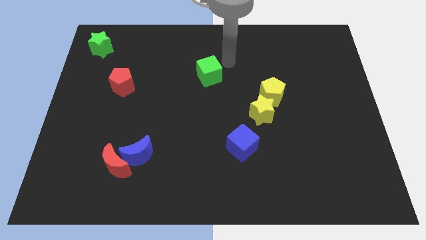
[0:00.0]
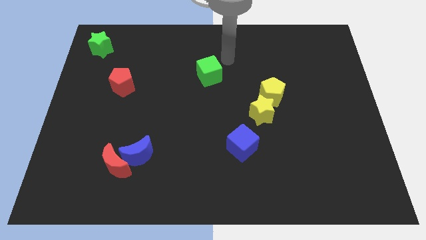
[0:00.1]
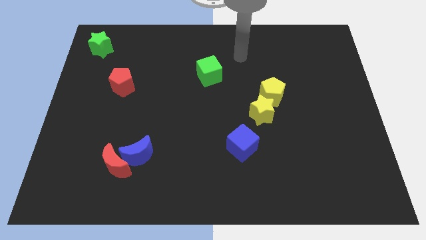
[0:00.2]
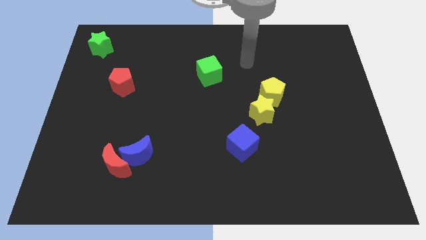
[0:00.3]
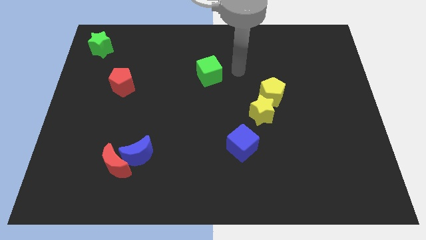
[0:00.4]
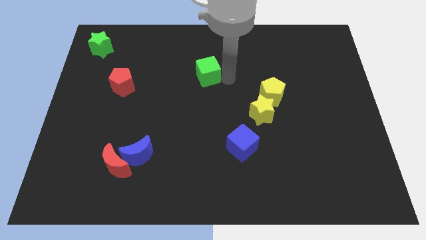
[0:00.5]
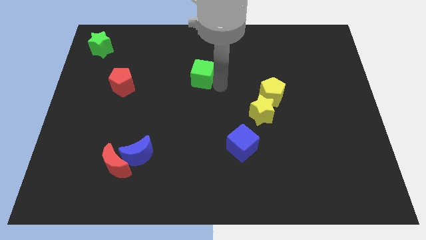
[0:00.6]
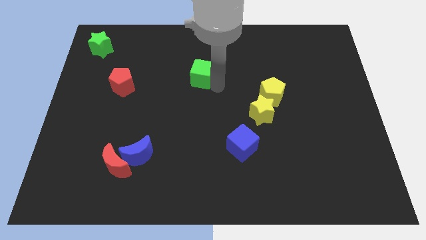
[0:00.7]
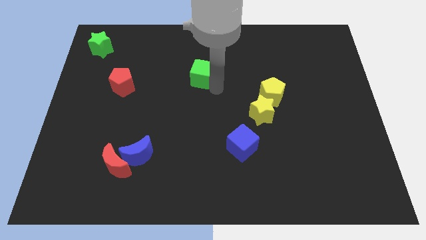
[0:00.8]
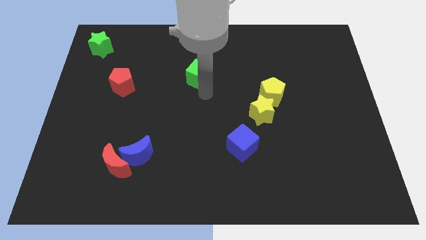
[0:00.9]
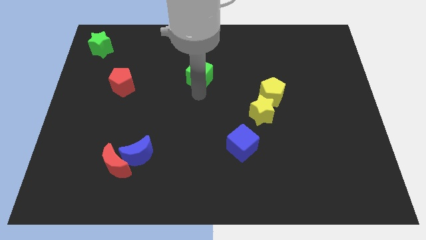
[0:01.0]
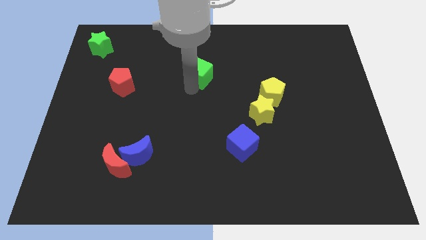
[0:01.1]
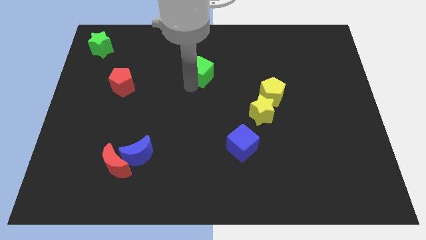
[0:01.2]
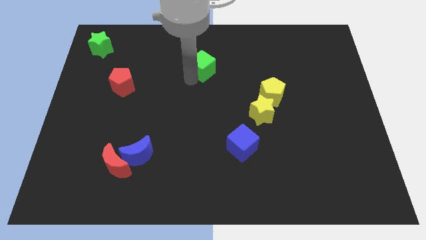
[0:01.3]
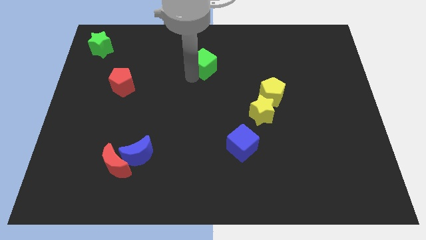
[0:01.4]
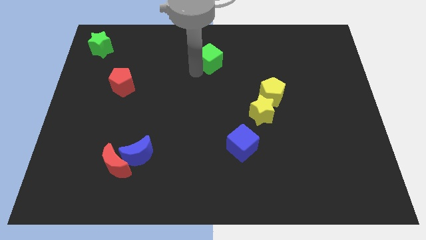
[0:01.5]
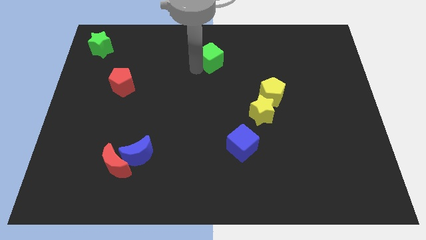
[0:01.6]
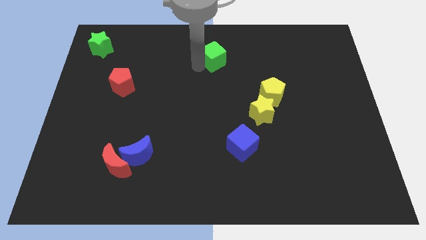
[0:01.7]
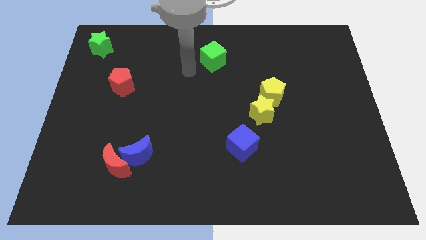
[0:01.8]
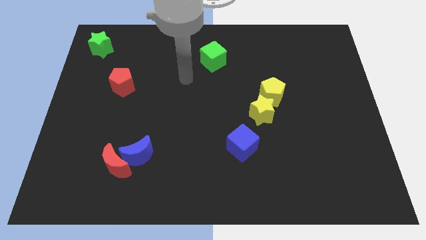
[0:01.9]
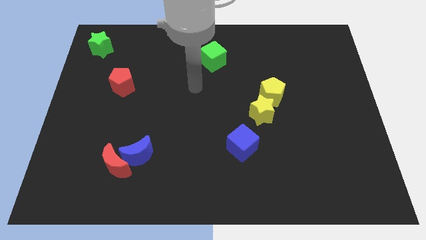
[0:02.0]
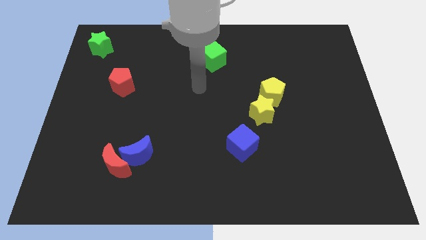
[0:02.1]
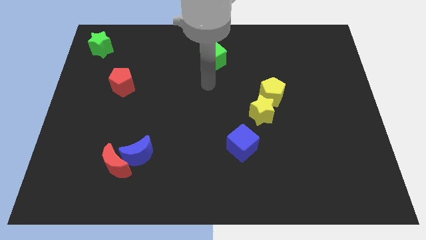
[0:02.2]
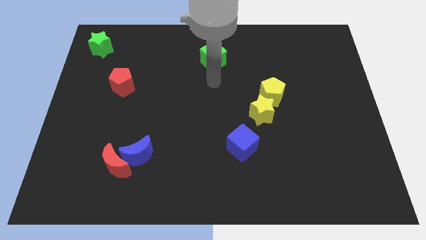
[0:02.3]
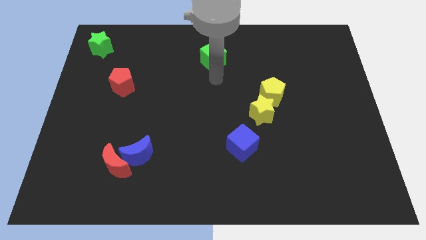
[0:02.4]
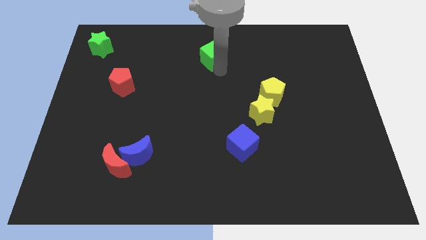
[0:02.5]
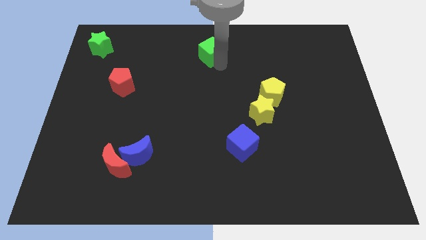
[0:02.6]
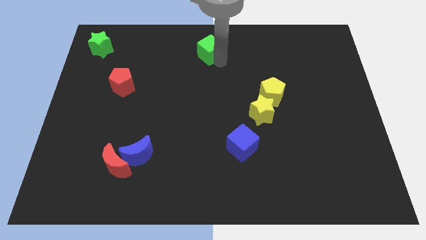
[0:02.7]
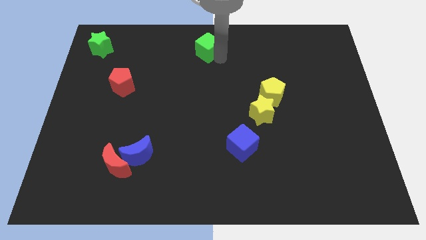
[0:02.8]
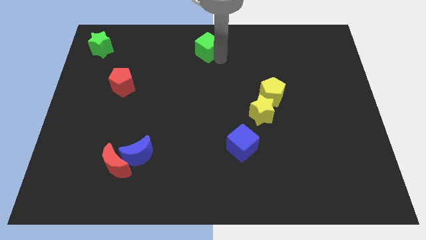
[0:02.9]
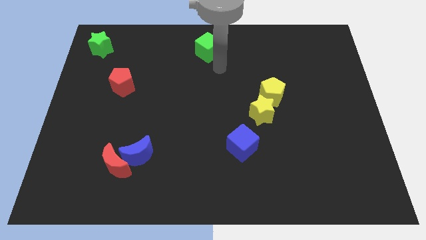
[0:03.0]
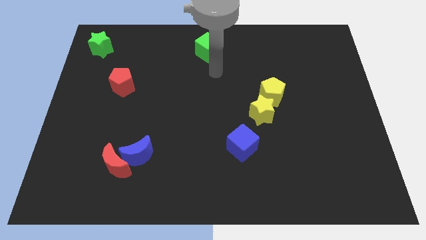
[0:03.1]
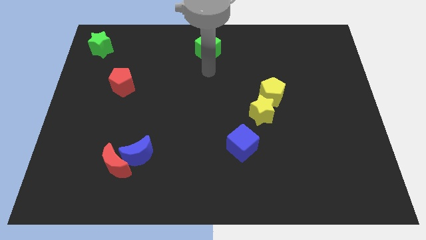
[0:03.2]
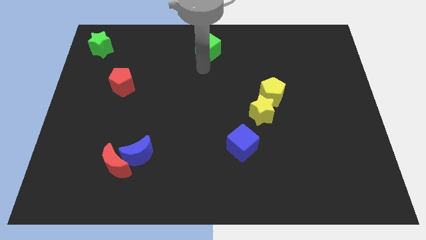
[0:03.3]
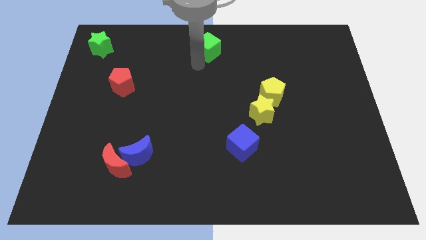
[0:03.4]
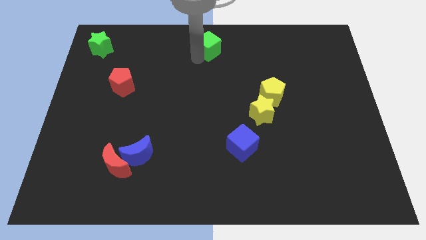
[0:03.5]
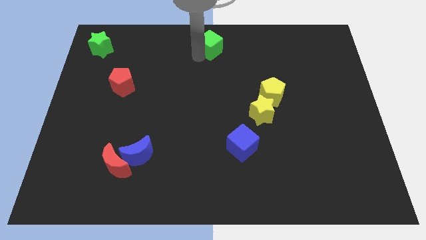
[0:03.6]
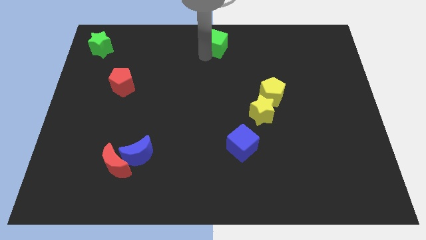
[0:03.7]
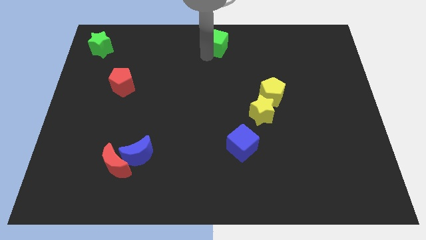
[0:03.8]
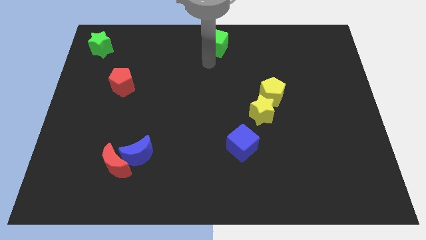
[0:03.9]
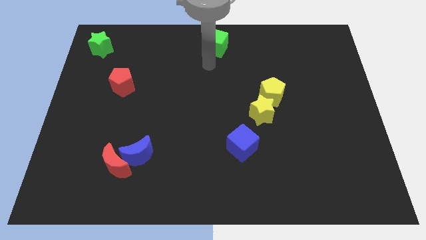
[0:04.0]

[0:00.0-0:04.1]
push the green cube at the top center of the board

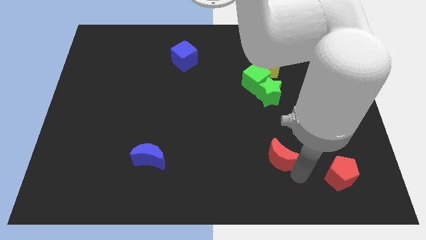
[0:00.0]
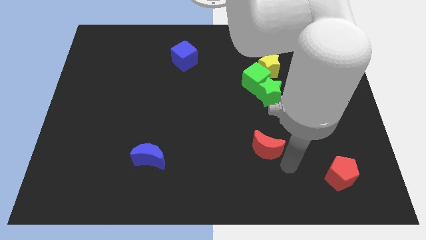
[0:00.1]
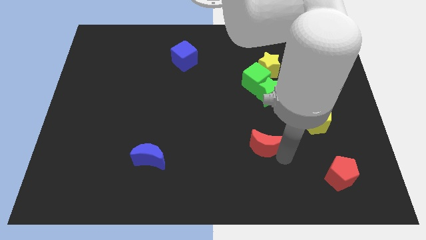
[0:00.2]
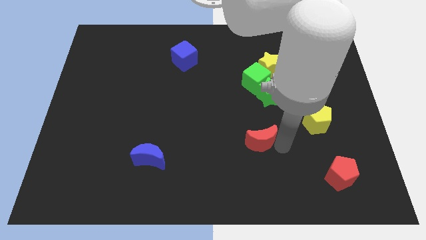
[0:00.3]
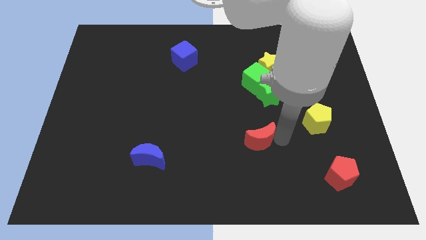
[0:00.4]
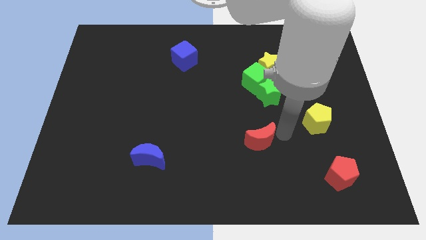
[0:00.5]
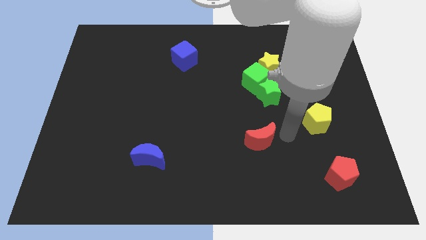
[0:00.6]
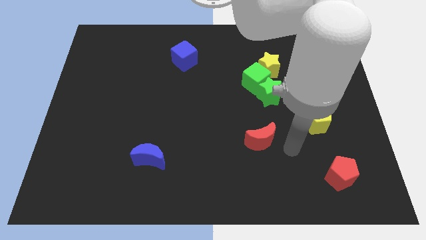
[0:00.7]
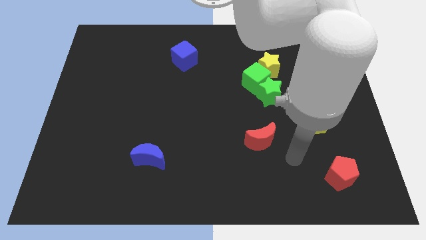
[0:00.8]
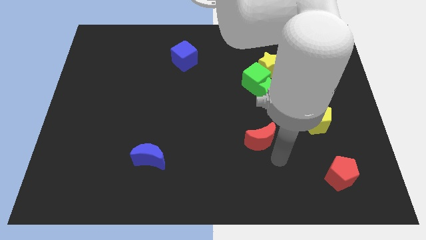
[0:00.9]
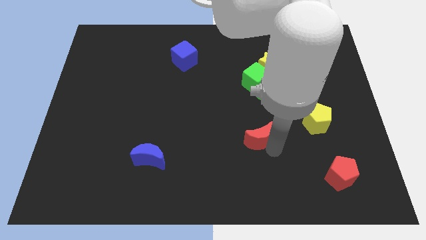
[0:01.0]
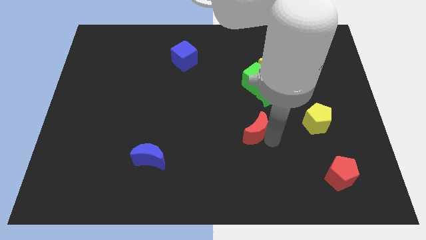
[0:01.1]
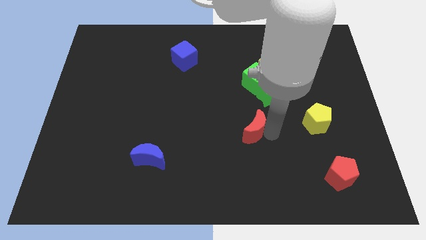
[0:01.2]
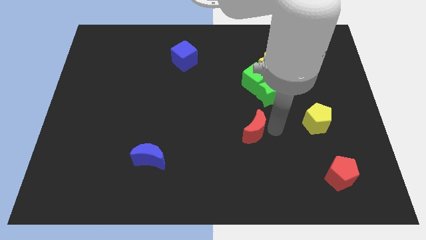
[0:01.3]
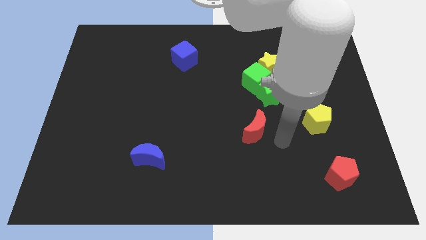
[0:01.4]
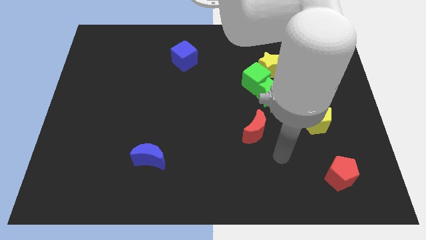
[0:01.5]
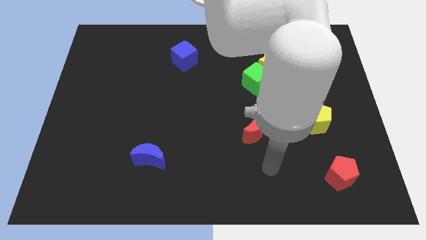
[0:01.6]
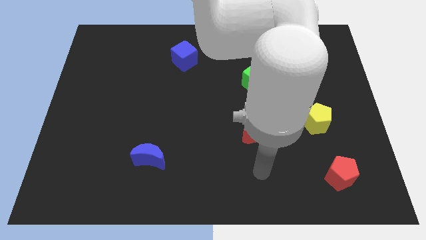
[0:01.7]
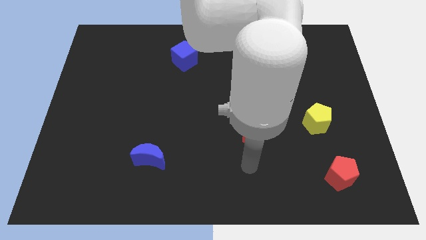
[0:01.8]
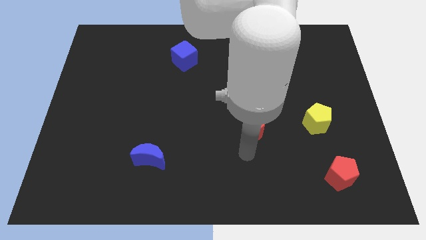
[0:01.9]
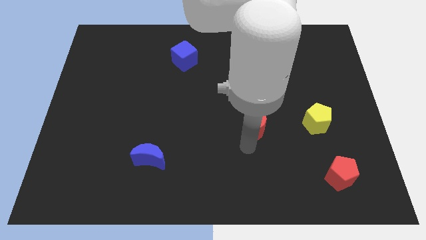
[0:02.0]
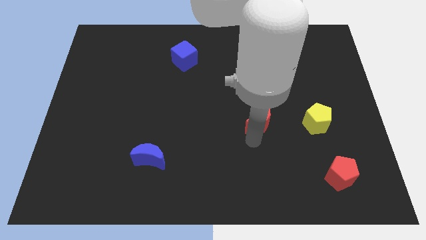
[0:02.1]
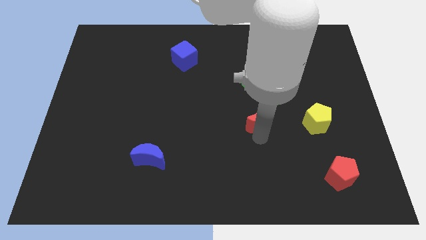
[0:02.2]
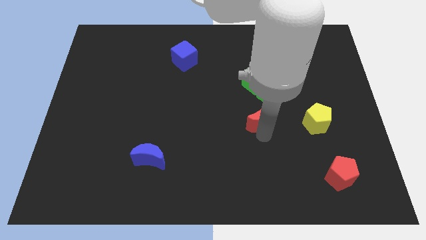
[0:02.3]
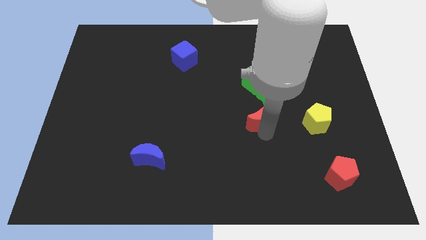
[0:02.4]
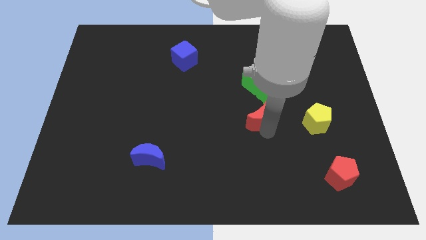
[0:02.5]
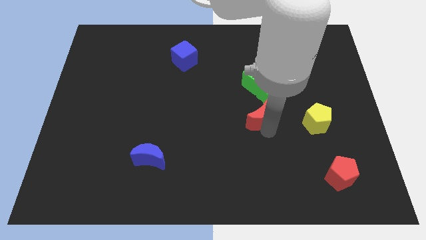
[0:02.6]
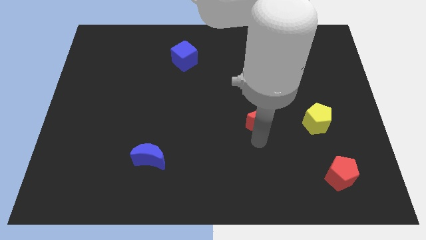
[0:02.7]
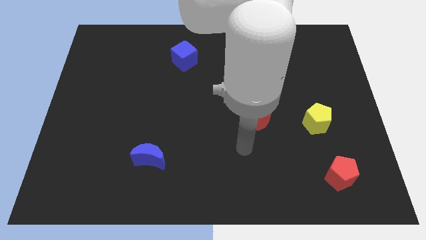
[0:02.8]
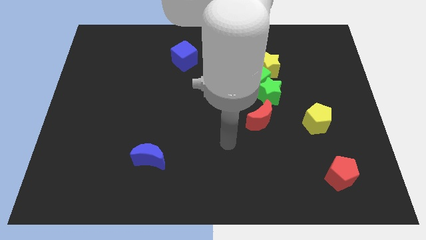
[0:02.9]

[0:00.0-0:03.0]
place the red moon into the green star

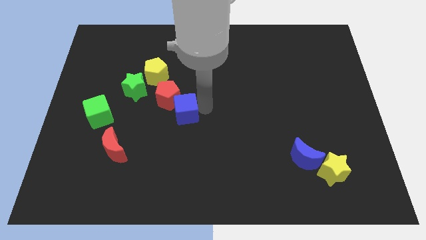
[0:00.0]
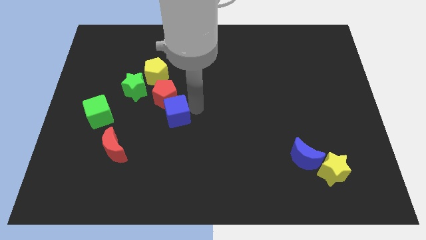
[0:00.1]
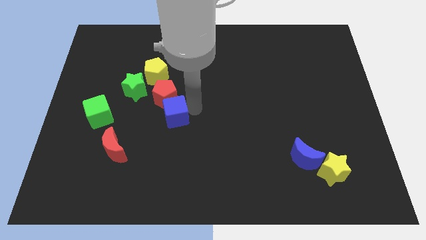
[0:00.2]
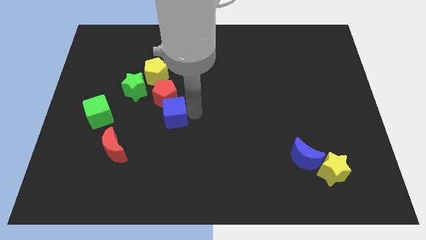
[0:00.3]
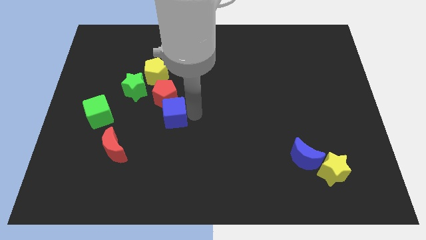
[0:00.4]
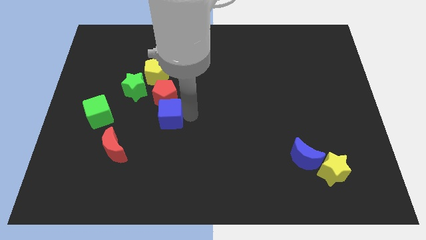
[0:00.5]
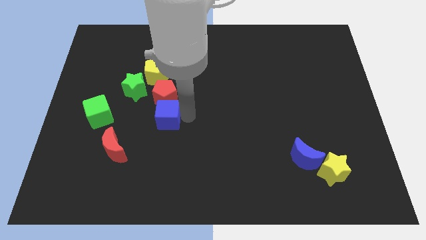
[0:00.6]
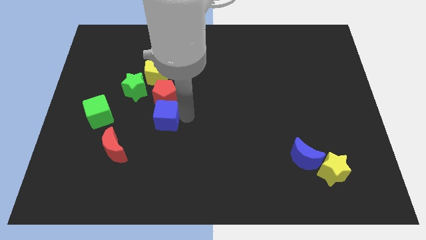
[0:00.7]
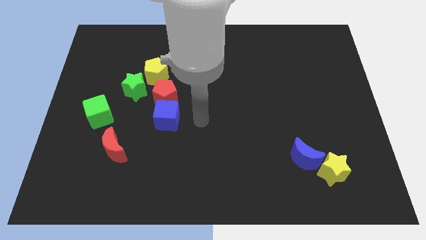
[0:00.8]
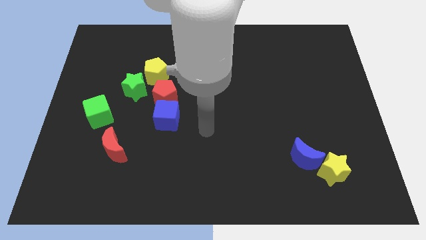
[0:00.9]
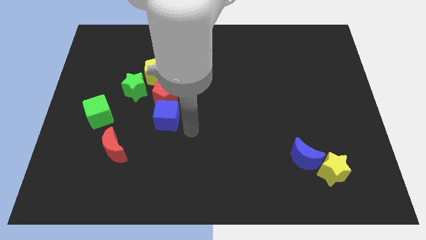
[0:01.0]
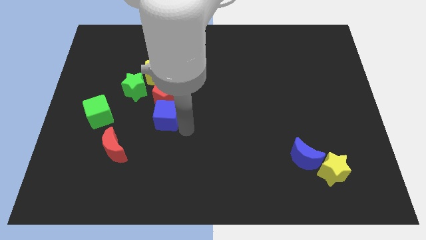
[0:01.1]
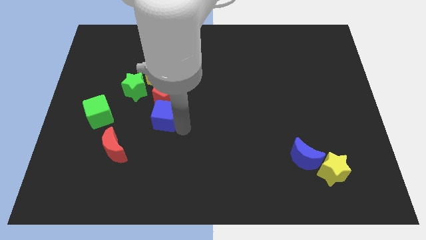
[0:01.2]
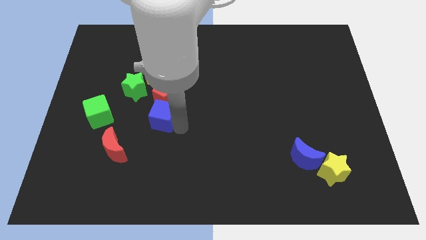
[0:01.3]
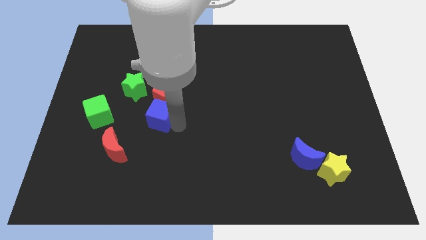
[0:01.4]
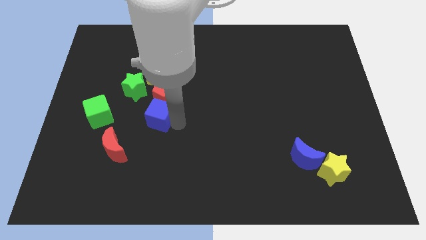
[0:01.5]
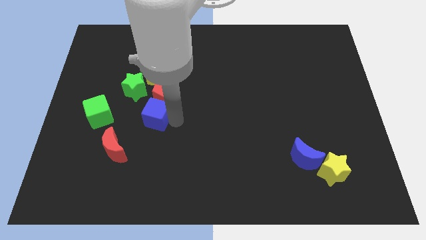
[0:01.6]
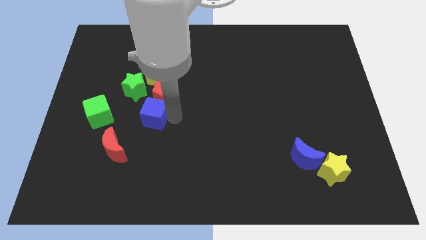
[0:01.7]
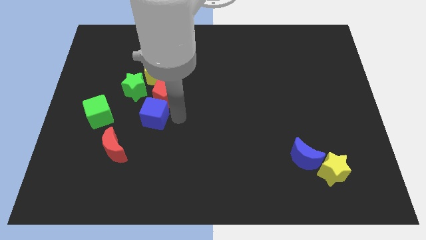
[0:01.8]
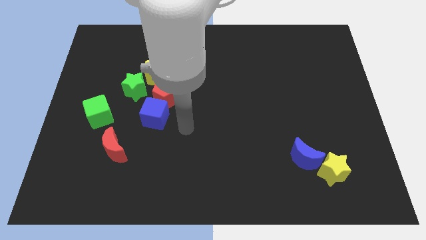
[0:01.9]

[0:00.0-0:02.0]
place the blue cube at the bottom side of the red pentagon

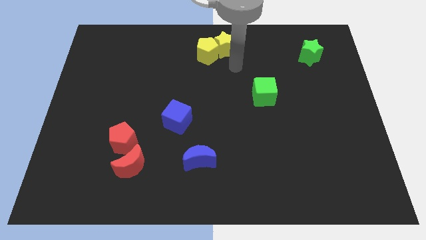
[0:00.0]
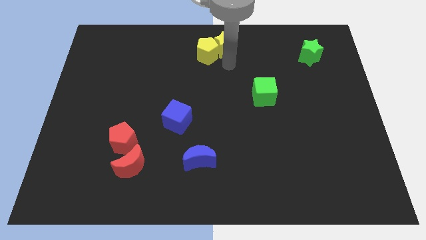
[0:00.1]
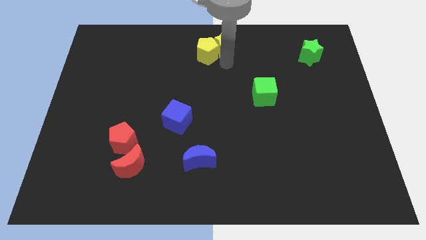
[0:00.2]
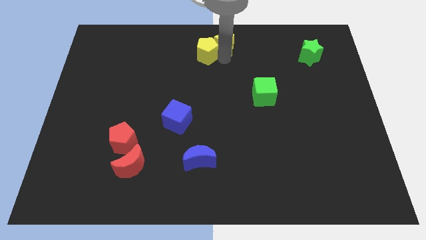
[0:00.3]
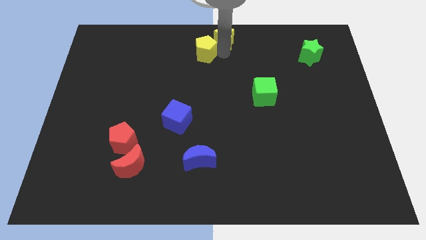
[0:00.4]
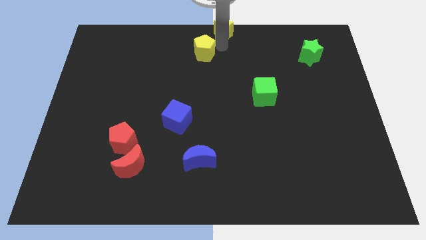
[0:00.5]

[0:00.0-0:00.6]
separate the yellow star and yellow pentagon
